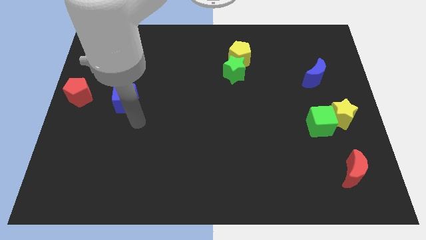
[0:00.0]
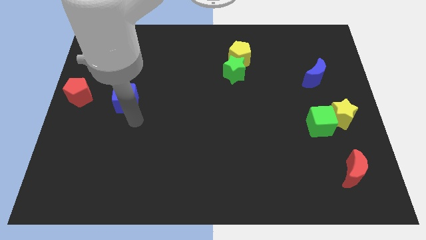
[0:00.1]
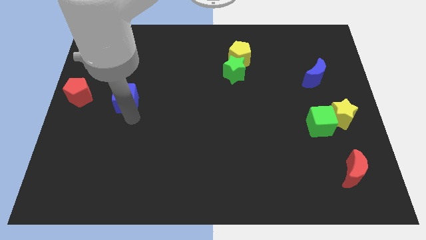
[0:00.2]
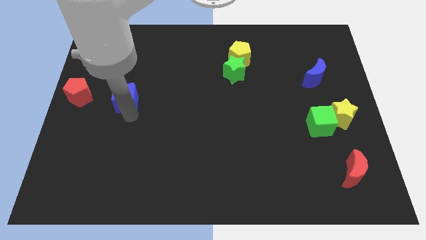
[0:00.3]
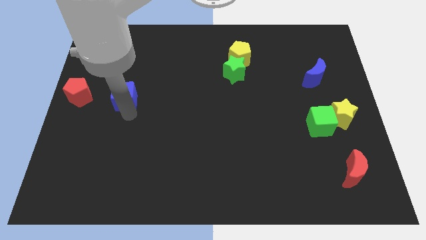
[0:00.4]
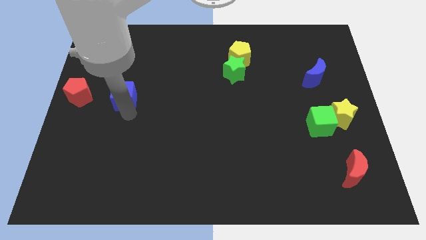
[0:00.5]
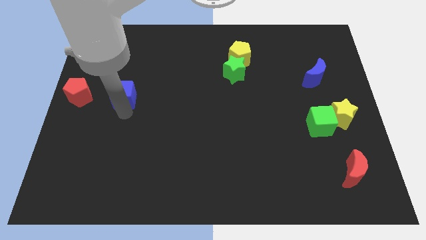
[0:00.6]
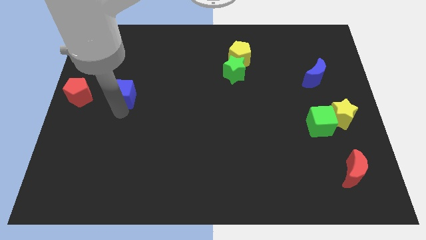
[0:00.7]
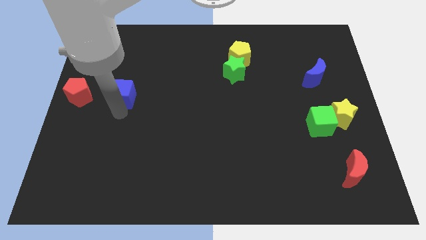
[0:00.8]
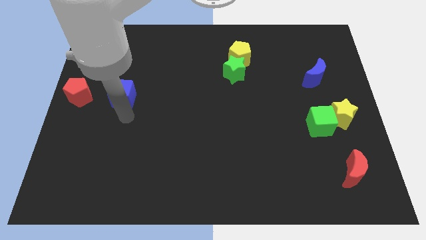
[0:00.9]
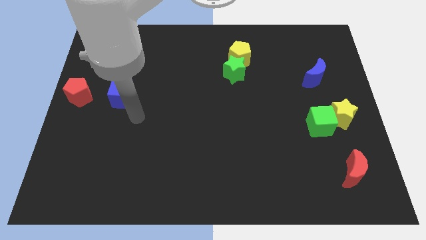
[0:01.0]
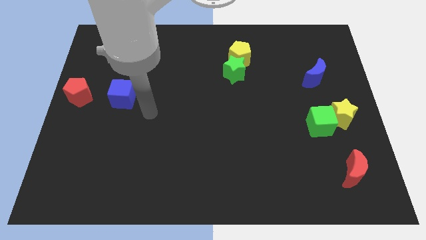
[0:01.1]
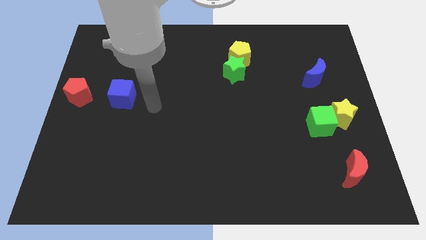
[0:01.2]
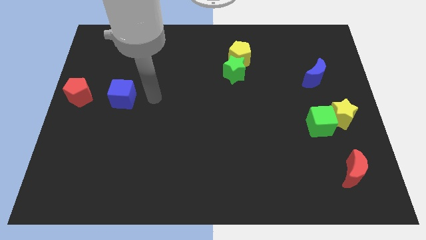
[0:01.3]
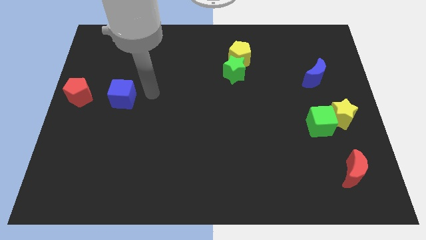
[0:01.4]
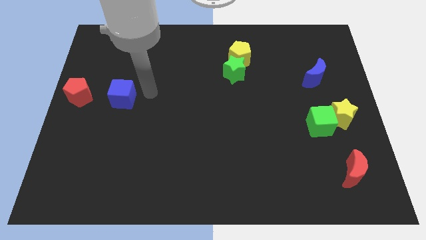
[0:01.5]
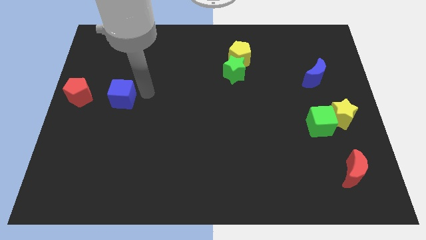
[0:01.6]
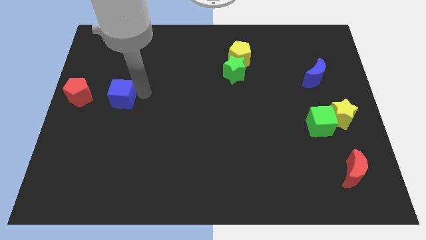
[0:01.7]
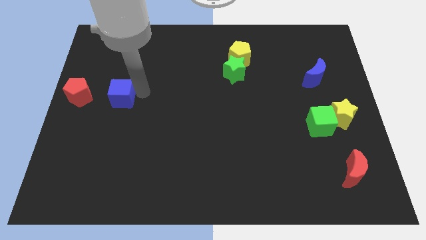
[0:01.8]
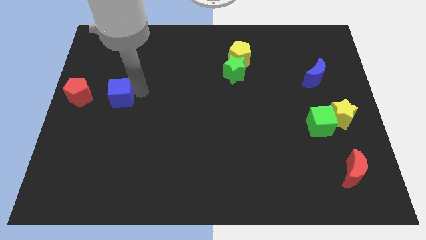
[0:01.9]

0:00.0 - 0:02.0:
drag the blue cube horizontal to the red pentagon

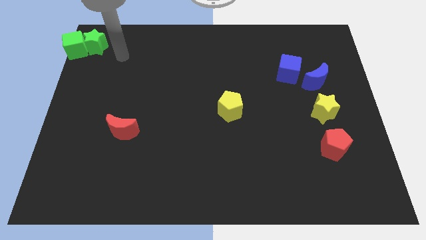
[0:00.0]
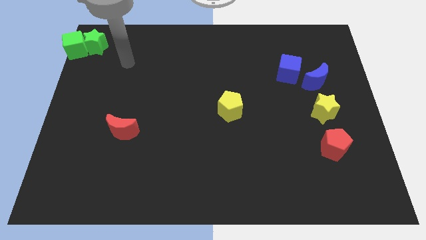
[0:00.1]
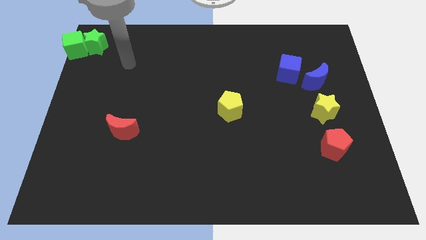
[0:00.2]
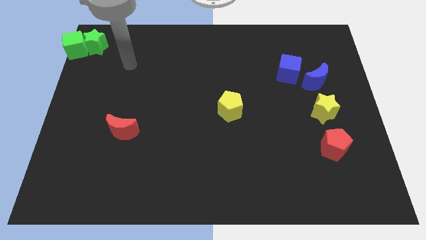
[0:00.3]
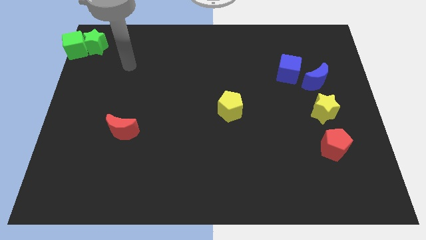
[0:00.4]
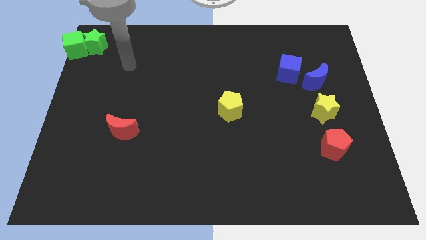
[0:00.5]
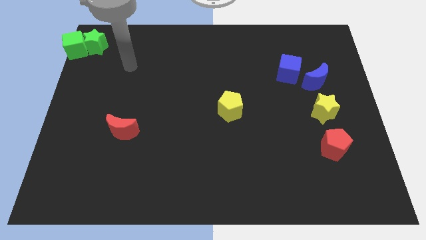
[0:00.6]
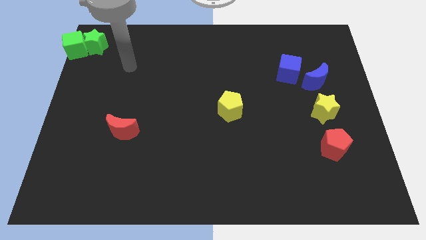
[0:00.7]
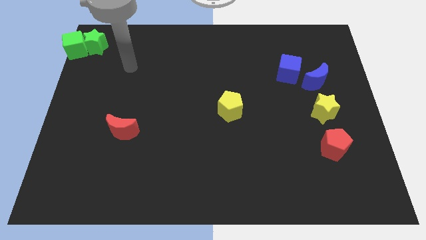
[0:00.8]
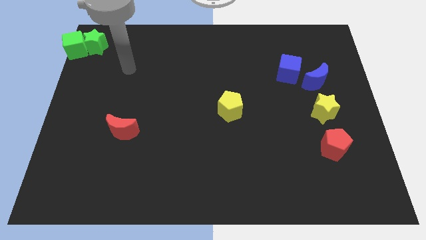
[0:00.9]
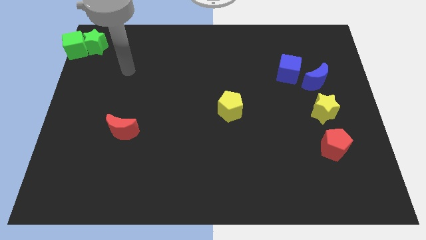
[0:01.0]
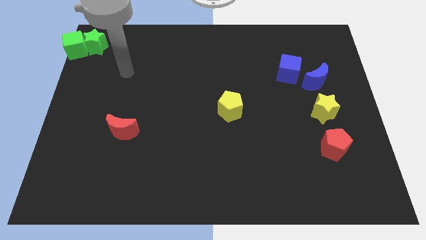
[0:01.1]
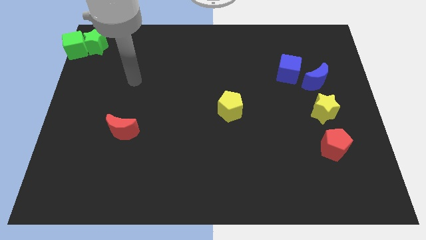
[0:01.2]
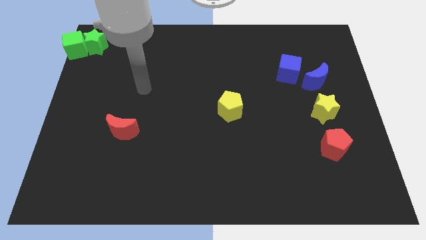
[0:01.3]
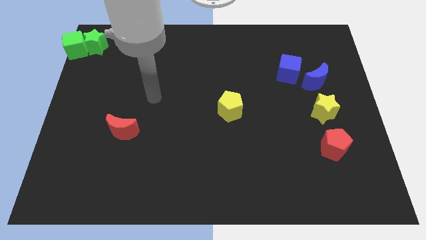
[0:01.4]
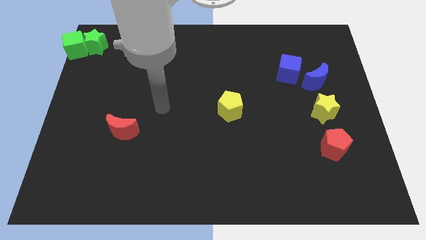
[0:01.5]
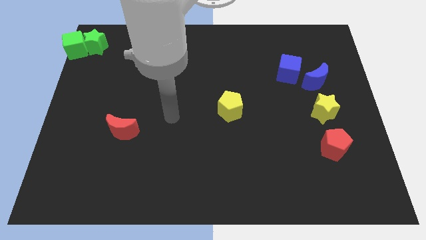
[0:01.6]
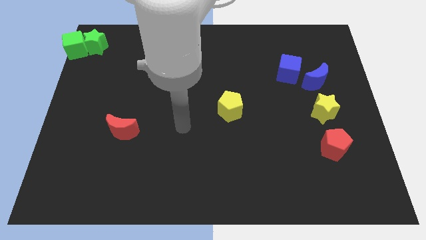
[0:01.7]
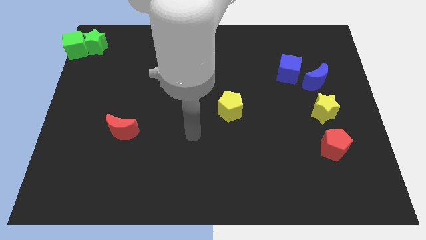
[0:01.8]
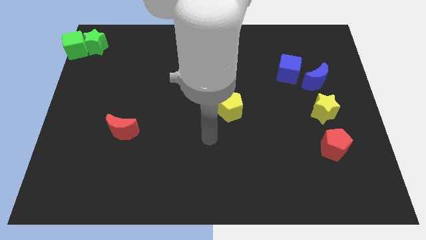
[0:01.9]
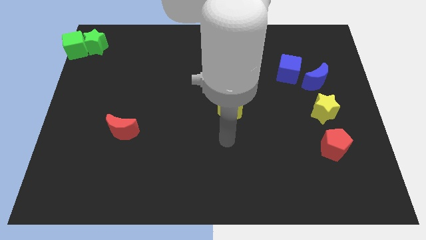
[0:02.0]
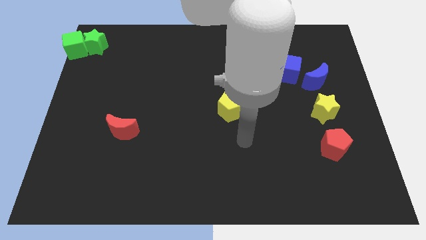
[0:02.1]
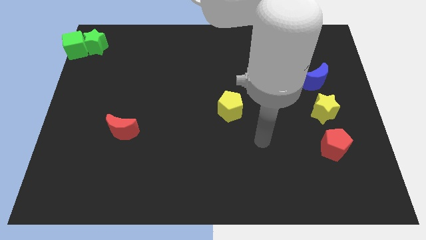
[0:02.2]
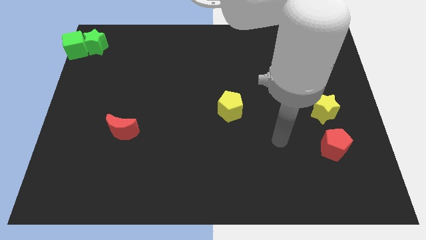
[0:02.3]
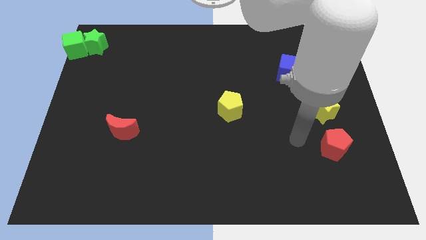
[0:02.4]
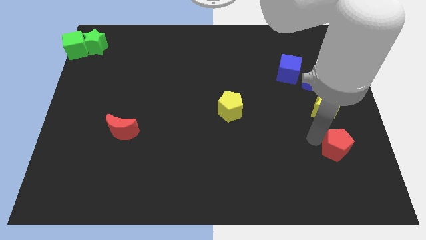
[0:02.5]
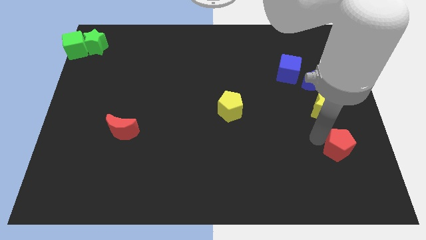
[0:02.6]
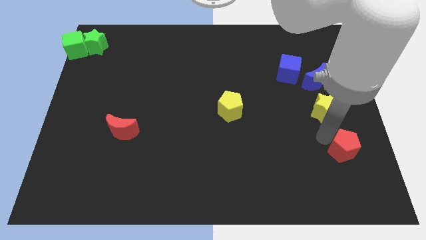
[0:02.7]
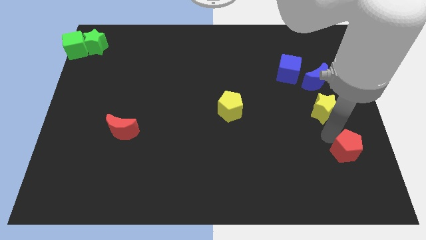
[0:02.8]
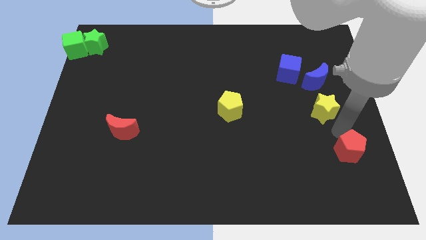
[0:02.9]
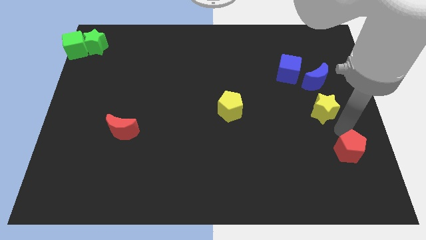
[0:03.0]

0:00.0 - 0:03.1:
move the red pentagon slightly to the right

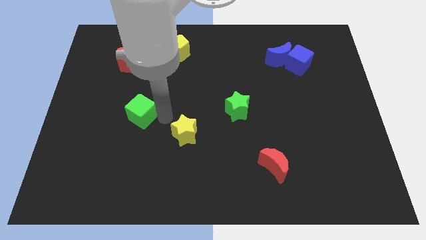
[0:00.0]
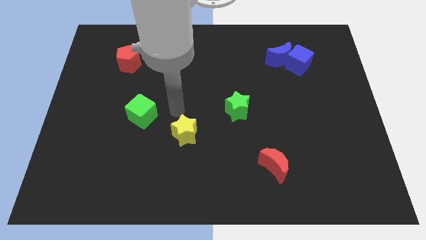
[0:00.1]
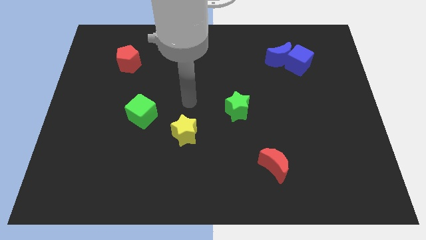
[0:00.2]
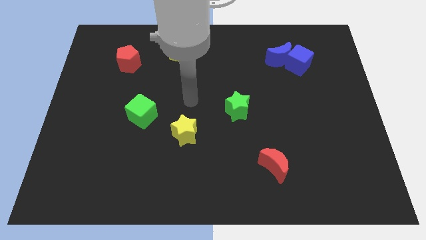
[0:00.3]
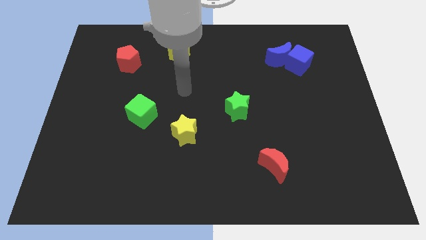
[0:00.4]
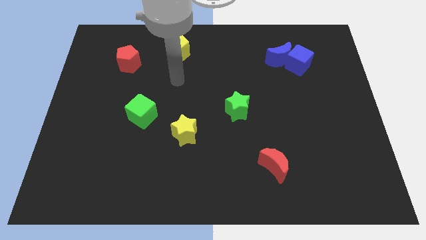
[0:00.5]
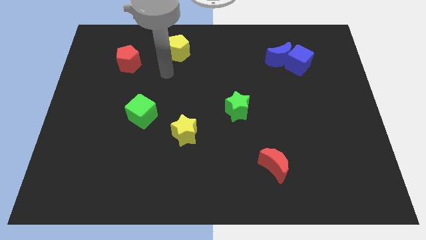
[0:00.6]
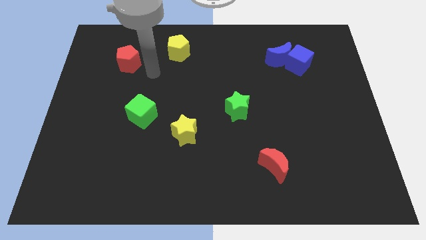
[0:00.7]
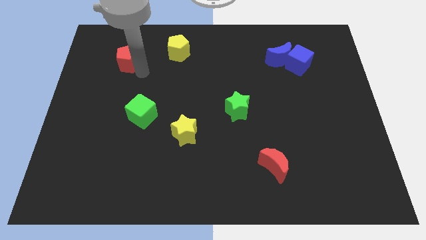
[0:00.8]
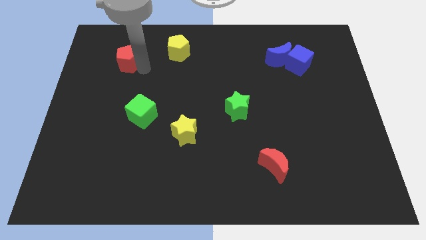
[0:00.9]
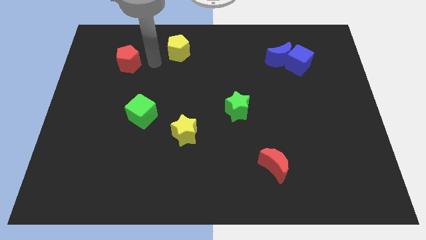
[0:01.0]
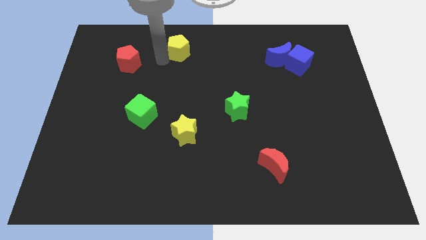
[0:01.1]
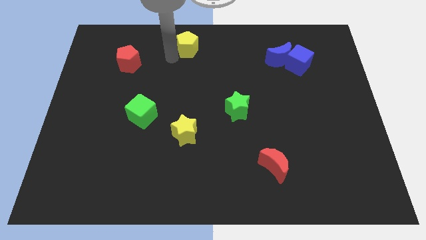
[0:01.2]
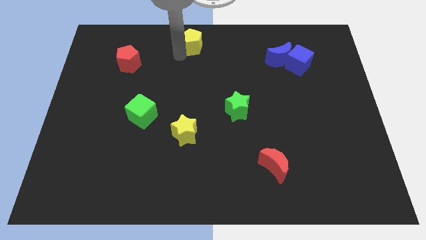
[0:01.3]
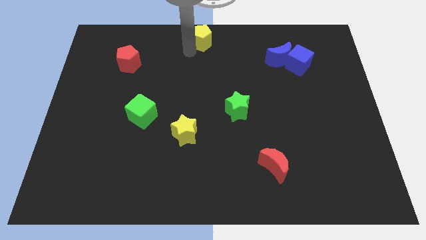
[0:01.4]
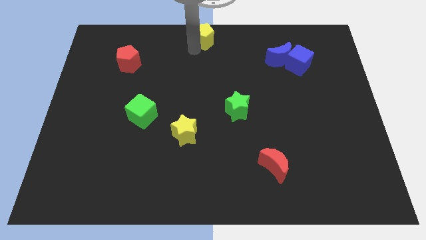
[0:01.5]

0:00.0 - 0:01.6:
push yellow pentagon towards the top center of the board

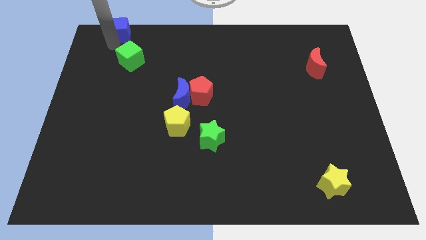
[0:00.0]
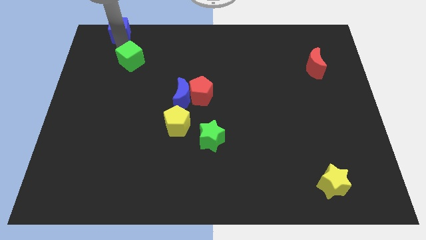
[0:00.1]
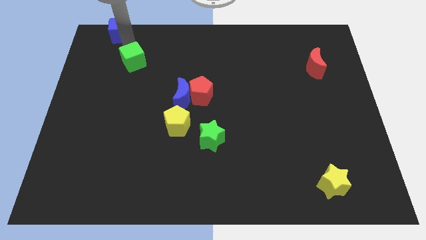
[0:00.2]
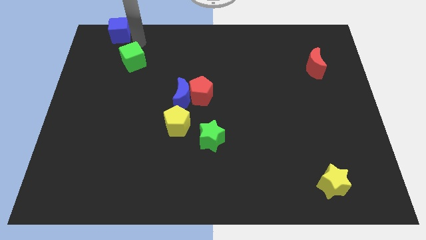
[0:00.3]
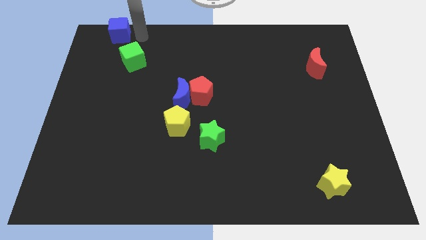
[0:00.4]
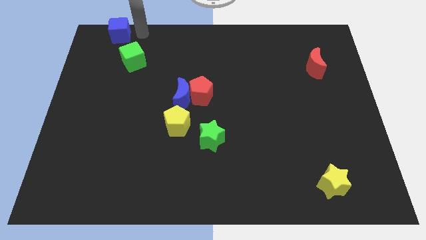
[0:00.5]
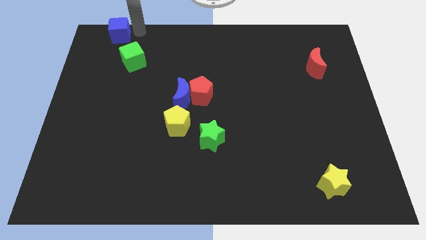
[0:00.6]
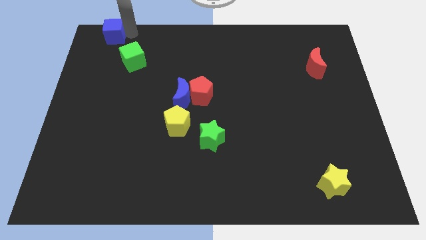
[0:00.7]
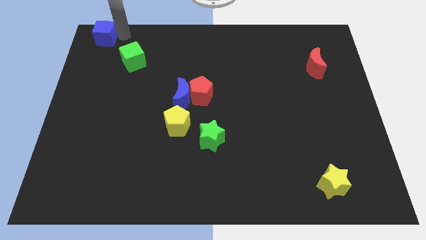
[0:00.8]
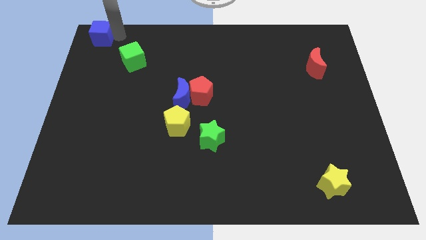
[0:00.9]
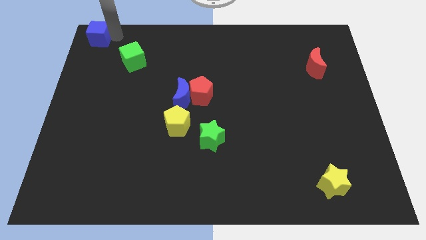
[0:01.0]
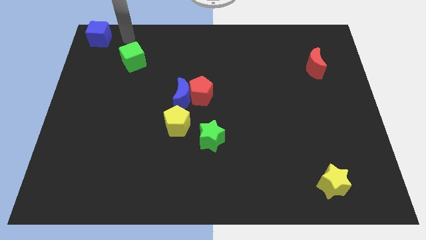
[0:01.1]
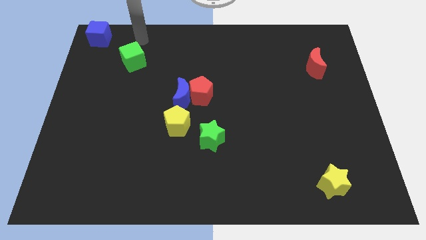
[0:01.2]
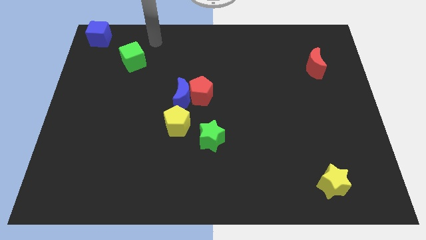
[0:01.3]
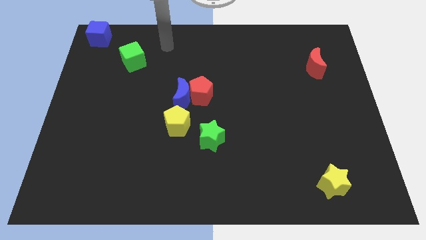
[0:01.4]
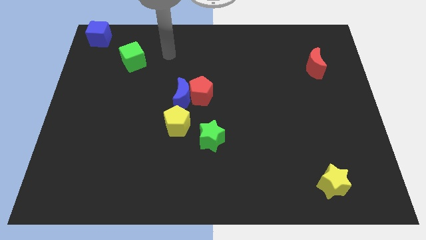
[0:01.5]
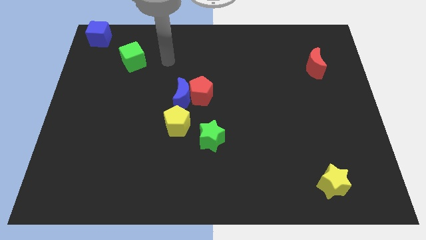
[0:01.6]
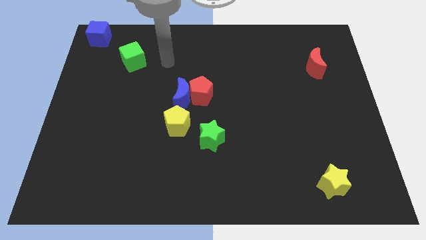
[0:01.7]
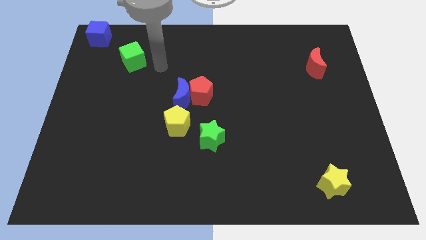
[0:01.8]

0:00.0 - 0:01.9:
move the blue cube to the top left corner of the board

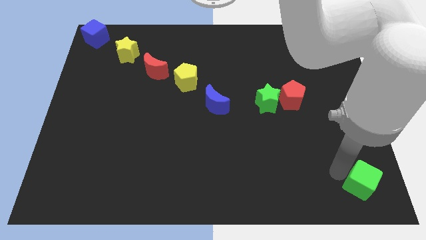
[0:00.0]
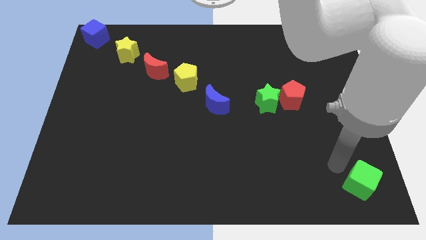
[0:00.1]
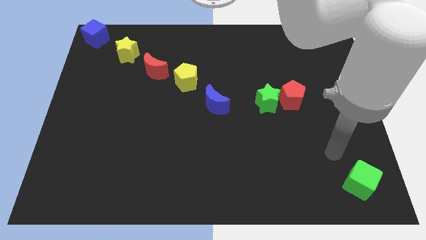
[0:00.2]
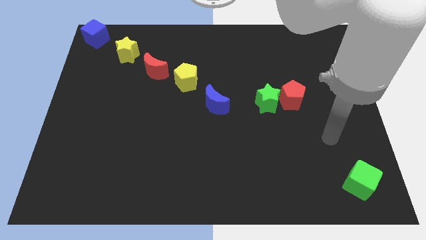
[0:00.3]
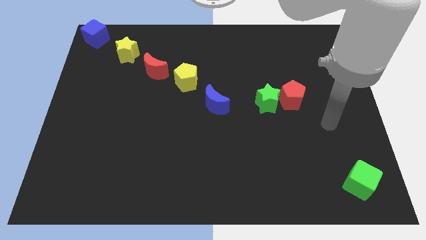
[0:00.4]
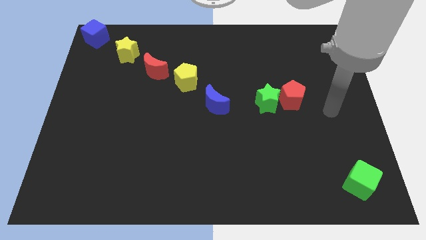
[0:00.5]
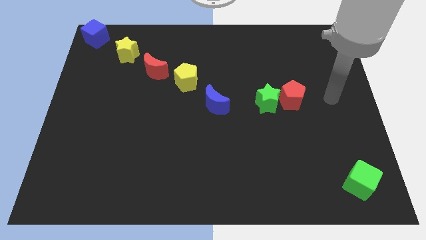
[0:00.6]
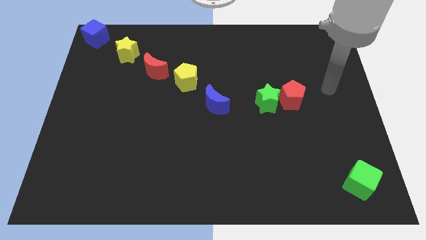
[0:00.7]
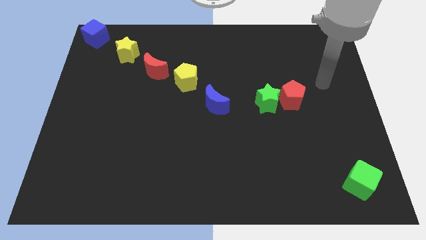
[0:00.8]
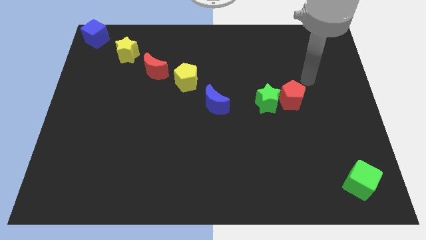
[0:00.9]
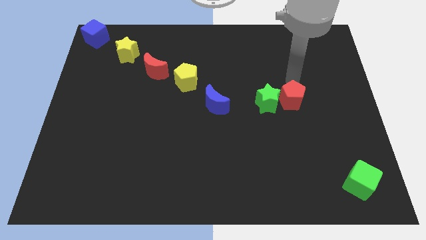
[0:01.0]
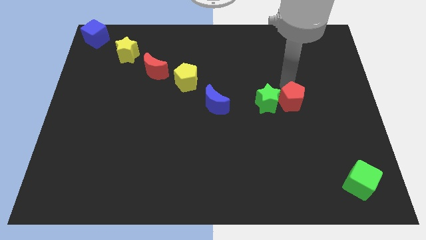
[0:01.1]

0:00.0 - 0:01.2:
move your arm to the top of red pentagon
